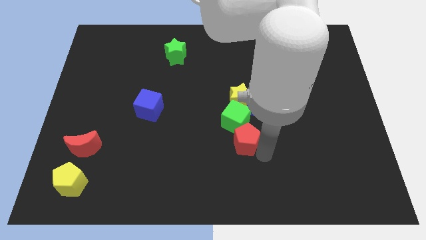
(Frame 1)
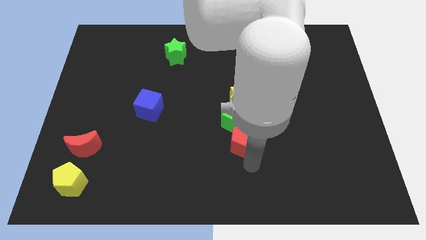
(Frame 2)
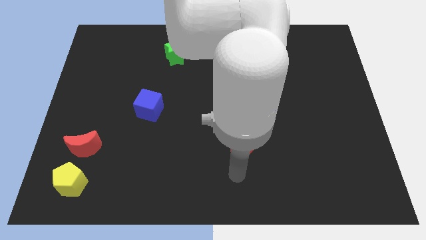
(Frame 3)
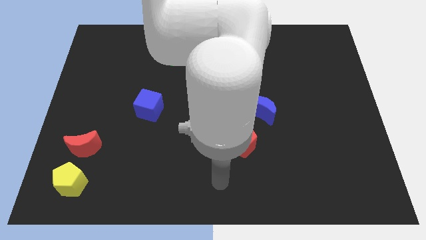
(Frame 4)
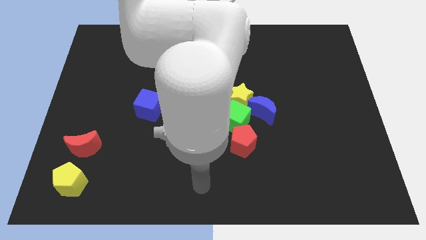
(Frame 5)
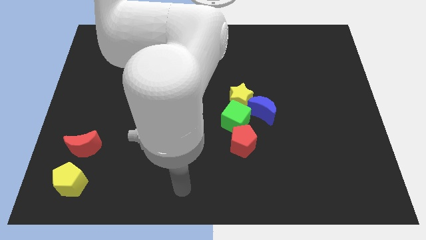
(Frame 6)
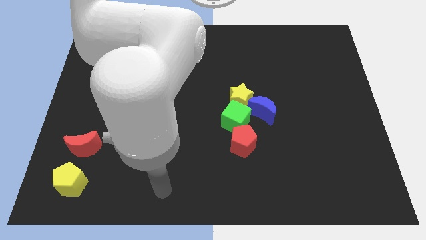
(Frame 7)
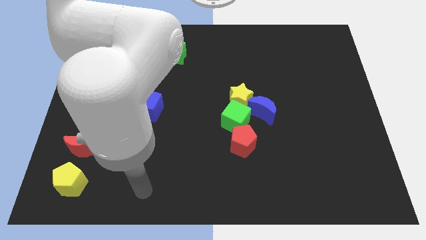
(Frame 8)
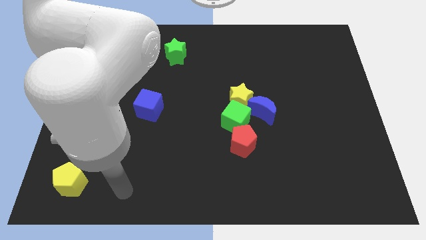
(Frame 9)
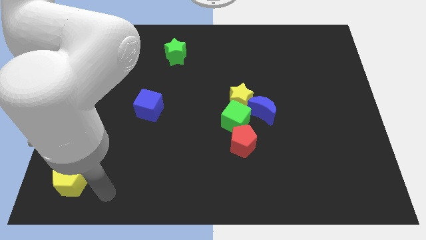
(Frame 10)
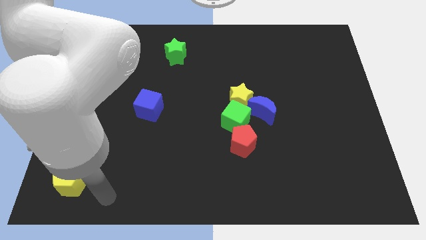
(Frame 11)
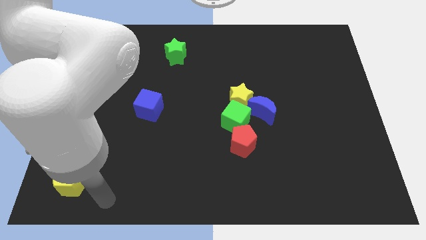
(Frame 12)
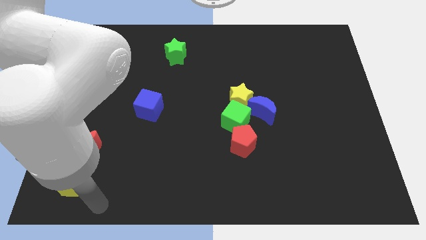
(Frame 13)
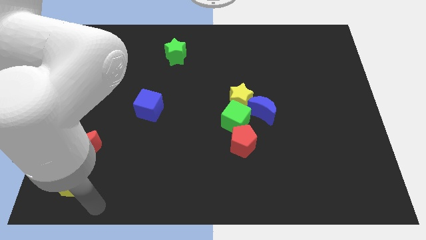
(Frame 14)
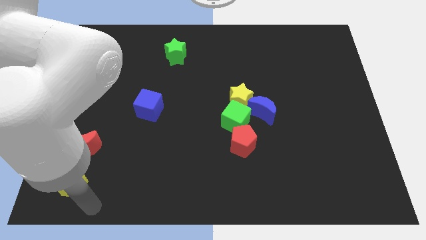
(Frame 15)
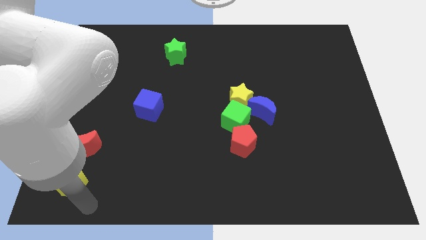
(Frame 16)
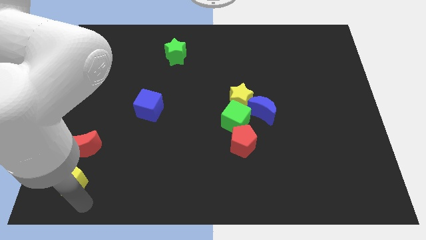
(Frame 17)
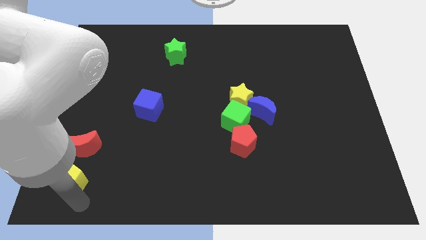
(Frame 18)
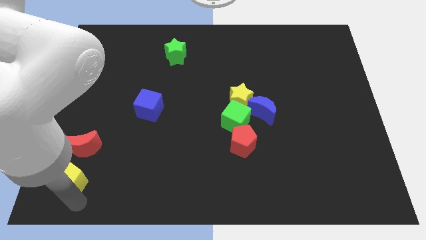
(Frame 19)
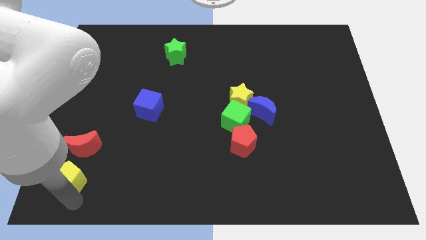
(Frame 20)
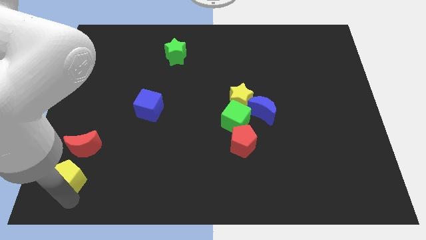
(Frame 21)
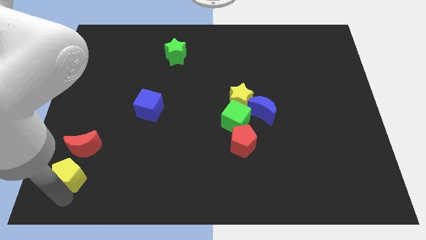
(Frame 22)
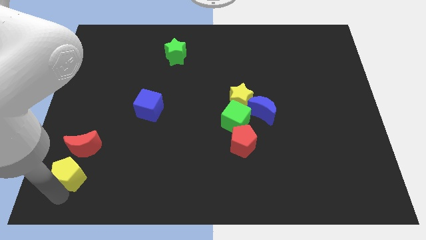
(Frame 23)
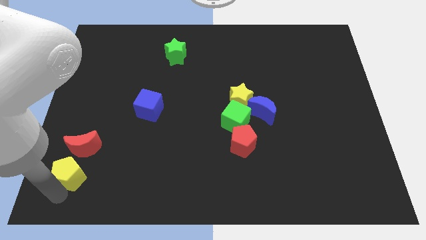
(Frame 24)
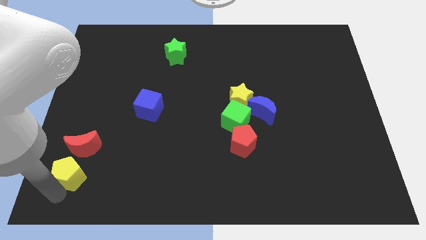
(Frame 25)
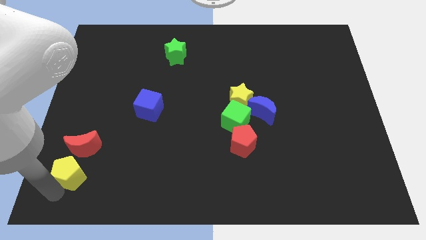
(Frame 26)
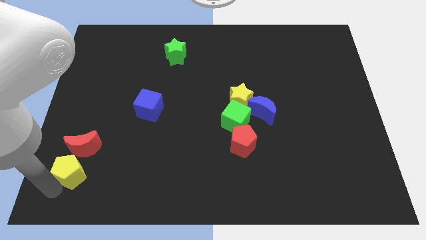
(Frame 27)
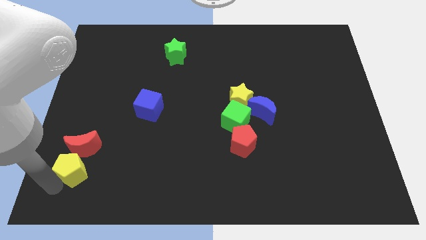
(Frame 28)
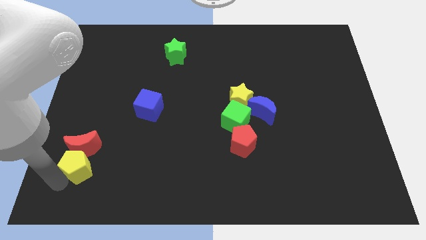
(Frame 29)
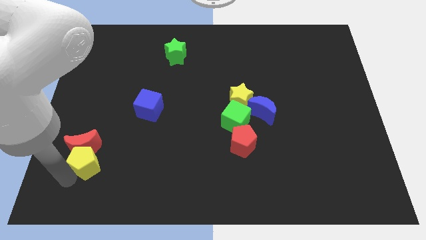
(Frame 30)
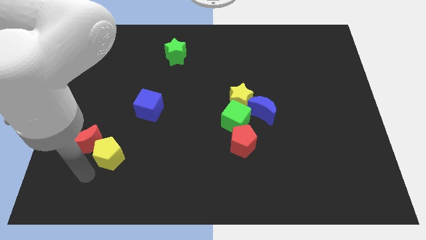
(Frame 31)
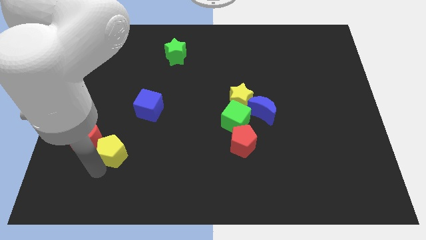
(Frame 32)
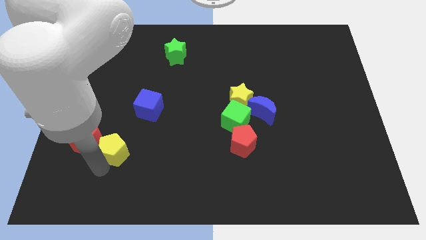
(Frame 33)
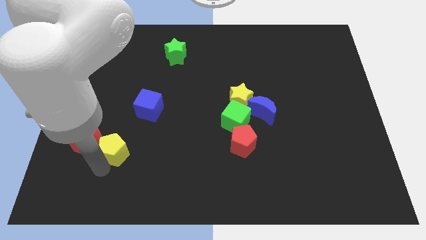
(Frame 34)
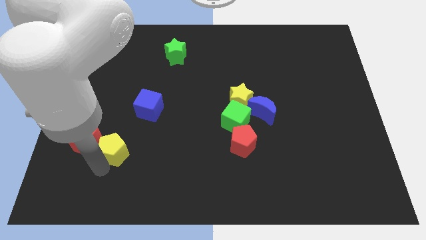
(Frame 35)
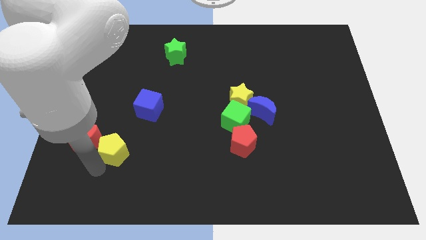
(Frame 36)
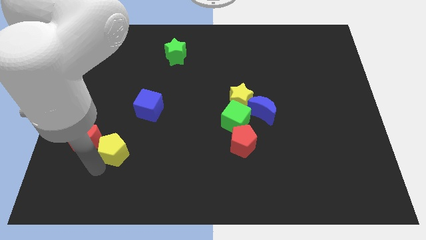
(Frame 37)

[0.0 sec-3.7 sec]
move the yellow pentagon into red moon

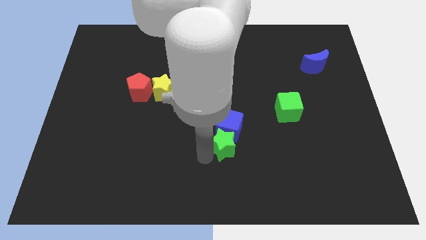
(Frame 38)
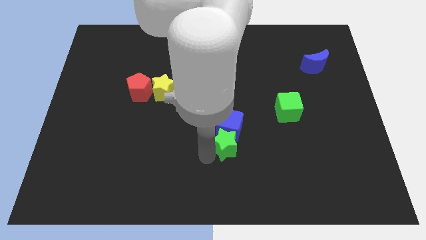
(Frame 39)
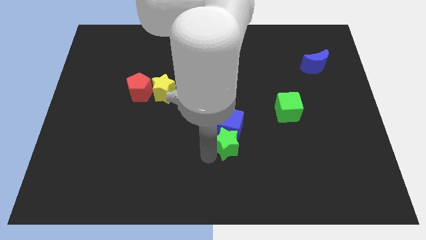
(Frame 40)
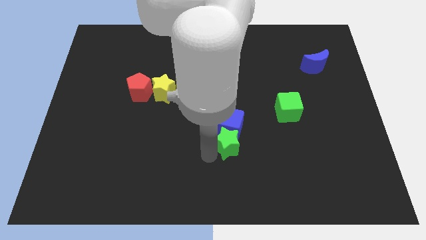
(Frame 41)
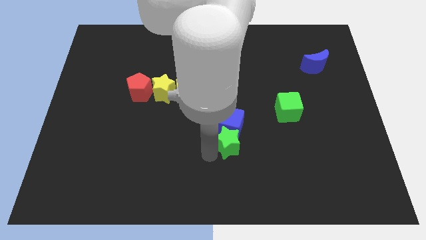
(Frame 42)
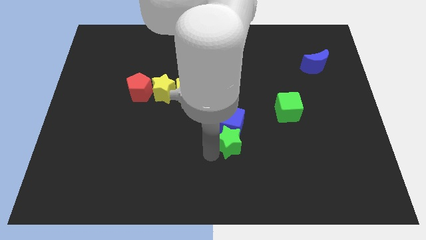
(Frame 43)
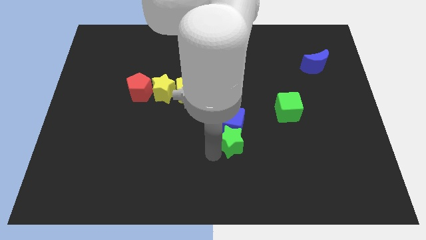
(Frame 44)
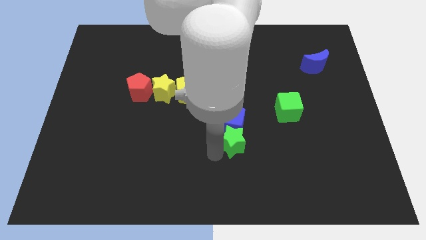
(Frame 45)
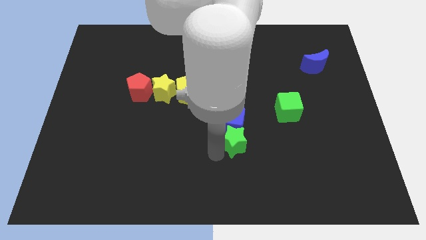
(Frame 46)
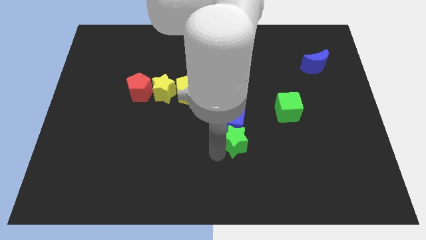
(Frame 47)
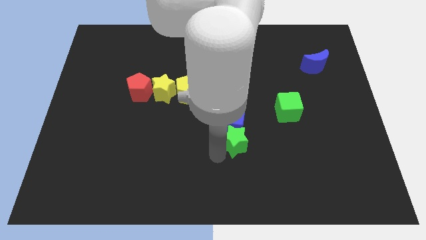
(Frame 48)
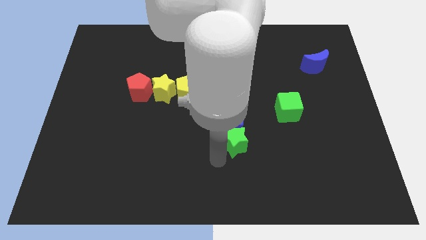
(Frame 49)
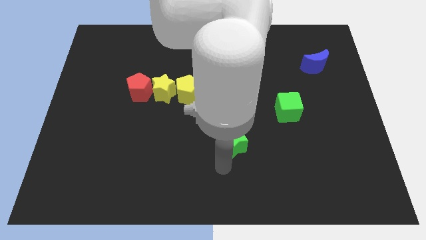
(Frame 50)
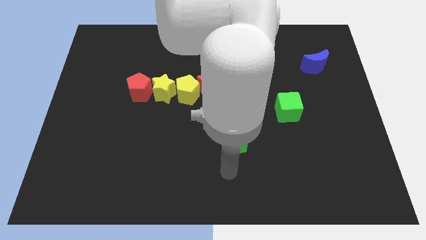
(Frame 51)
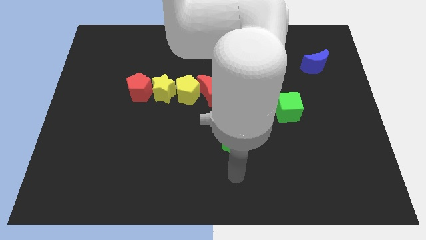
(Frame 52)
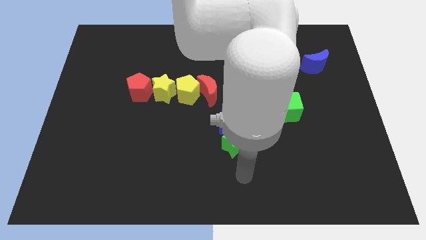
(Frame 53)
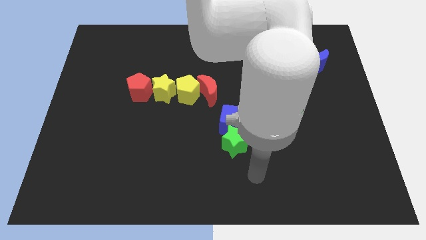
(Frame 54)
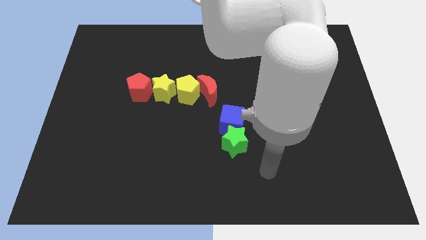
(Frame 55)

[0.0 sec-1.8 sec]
slide the green star to the bottom side of the blue cube

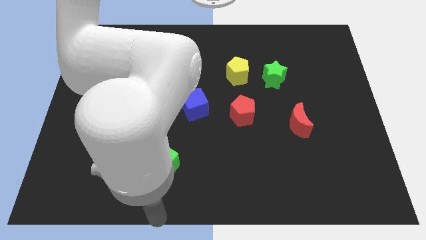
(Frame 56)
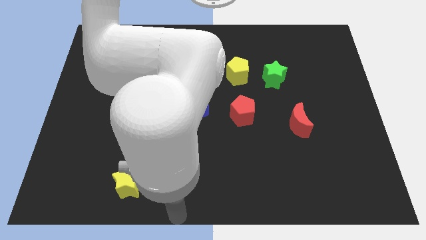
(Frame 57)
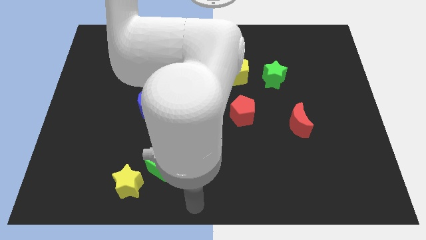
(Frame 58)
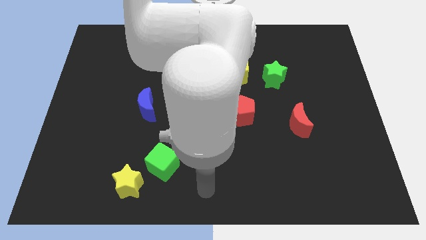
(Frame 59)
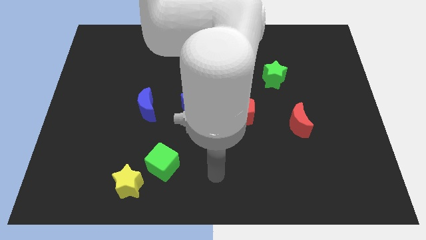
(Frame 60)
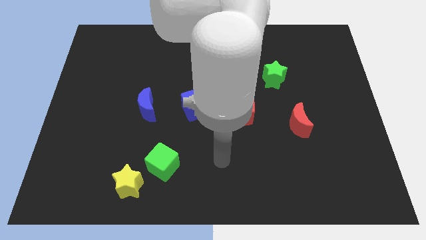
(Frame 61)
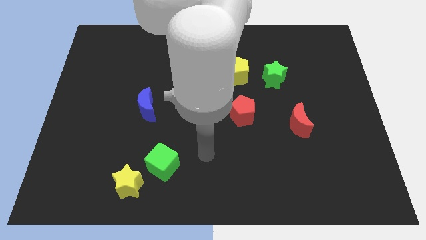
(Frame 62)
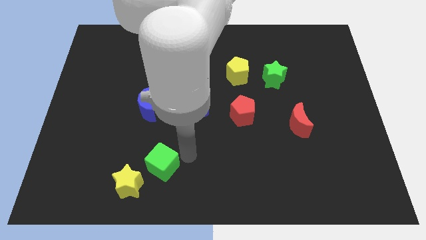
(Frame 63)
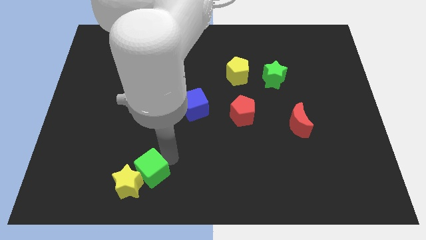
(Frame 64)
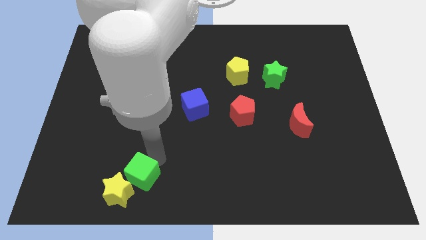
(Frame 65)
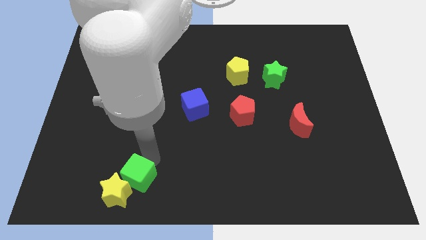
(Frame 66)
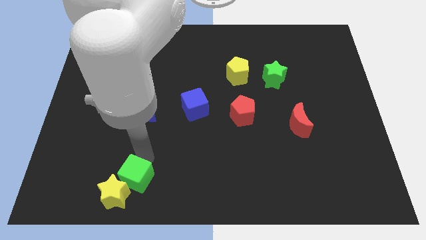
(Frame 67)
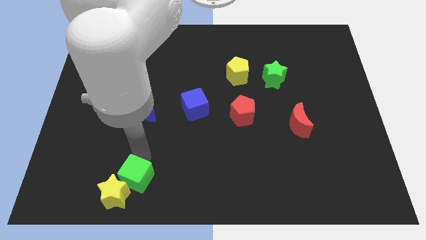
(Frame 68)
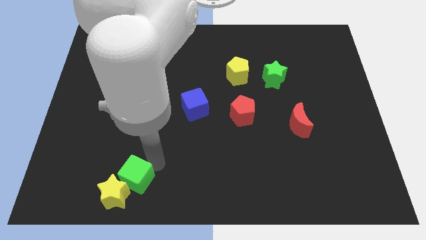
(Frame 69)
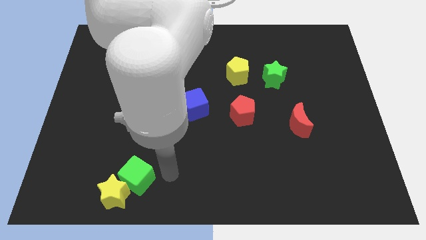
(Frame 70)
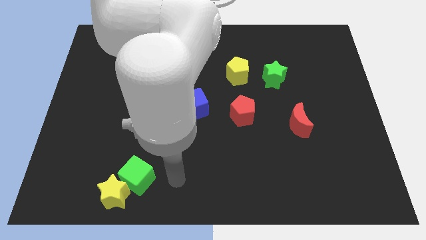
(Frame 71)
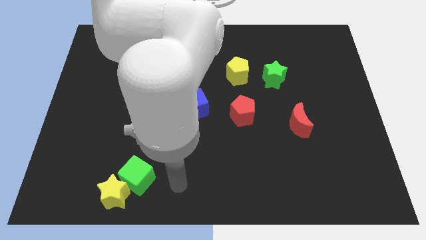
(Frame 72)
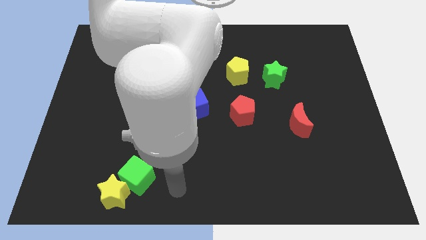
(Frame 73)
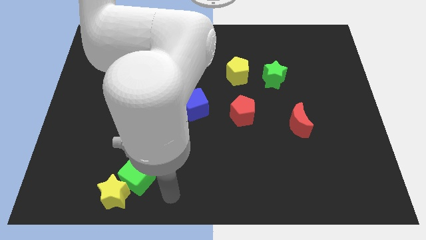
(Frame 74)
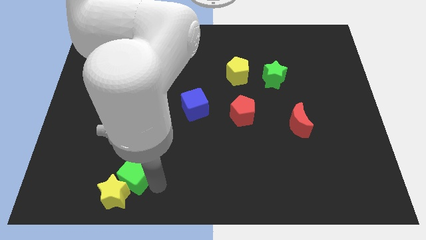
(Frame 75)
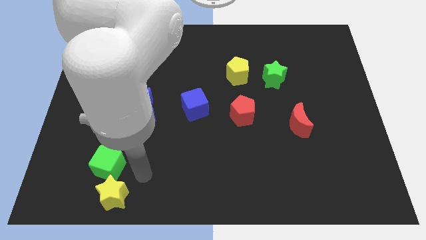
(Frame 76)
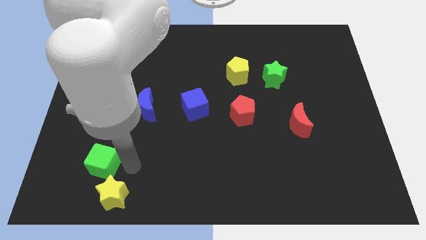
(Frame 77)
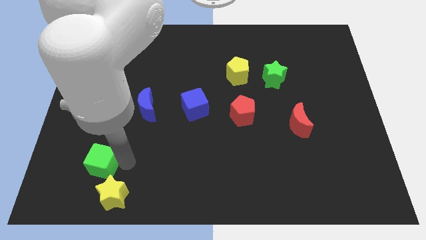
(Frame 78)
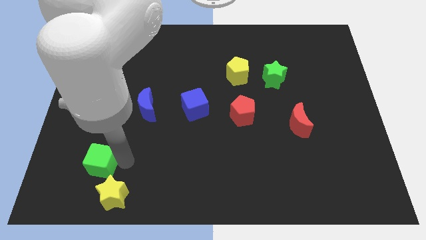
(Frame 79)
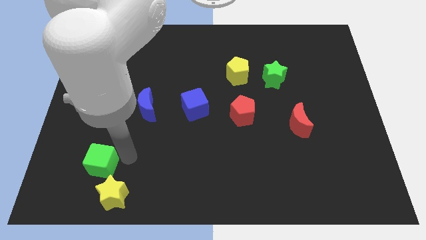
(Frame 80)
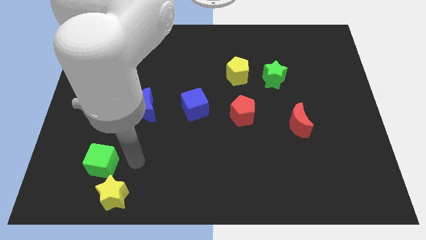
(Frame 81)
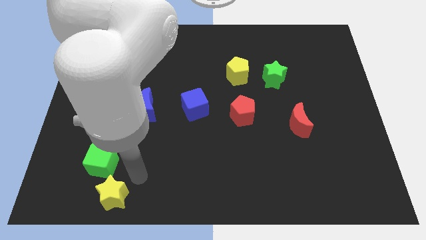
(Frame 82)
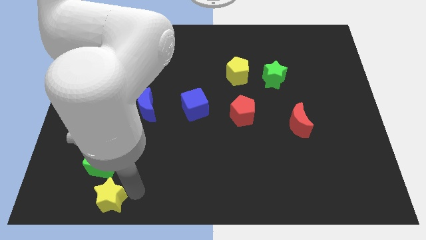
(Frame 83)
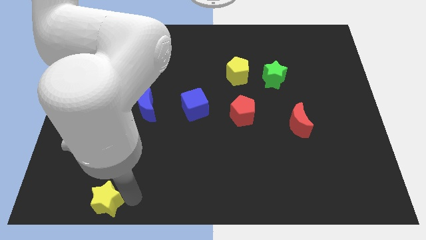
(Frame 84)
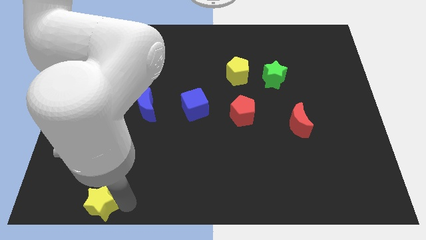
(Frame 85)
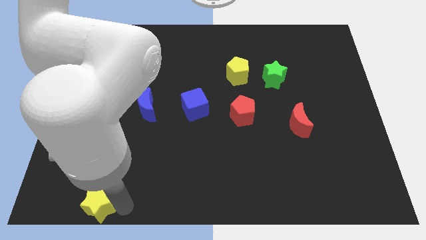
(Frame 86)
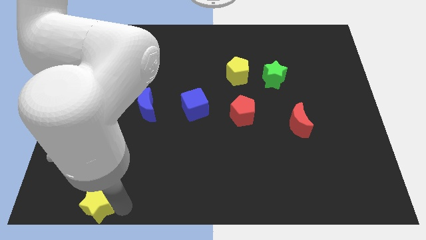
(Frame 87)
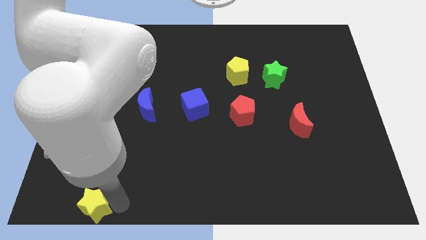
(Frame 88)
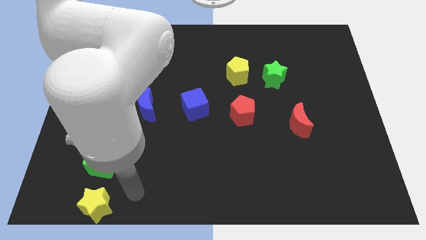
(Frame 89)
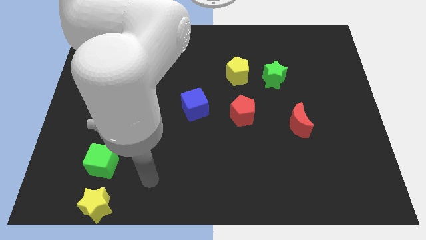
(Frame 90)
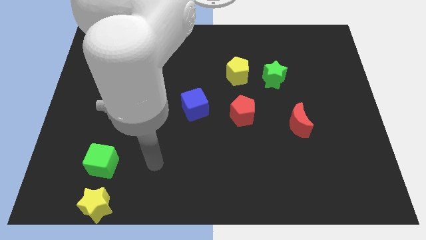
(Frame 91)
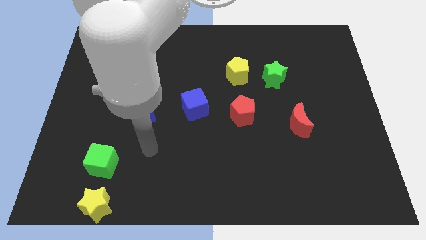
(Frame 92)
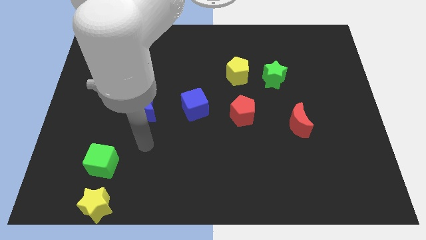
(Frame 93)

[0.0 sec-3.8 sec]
move the green cube and the yellow star to the left
